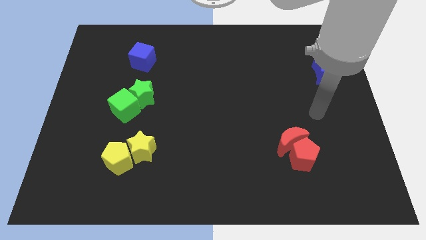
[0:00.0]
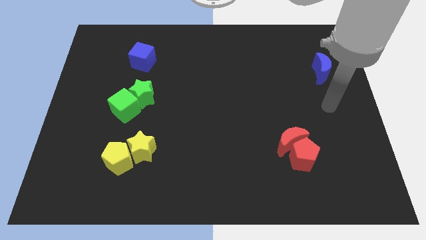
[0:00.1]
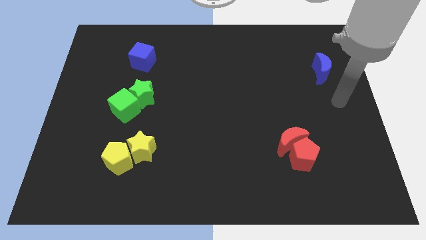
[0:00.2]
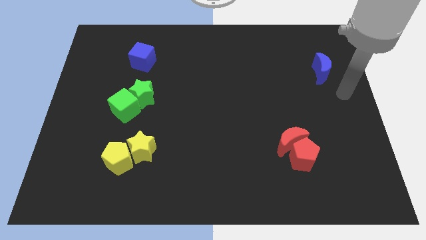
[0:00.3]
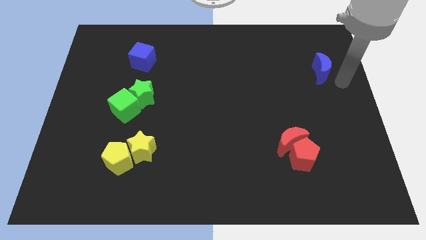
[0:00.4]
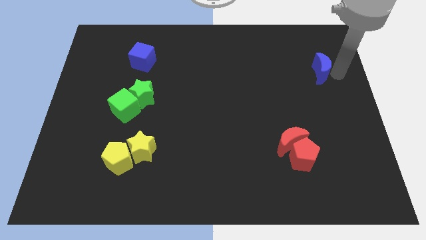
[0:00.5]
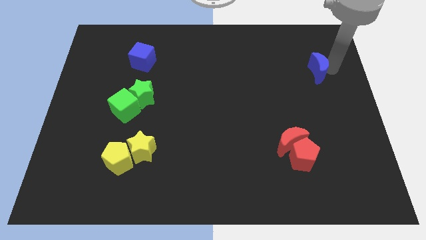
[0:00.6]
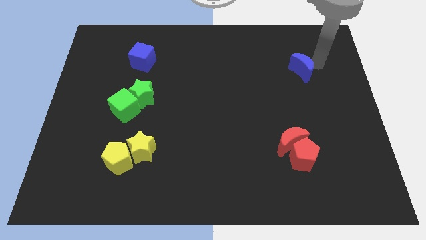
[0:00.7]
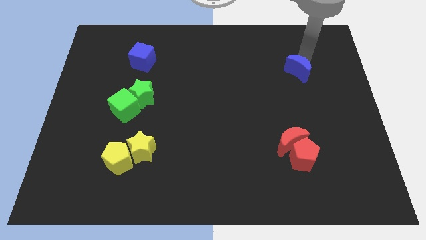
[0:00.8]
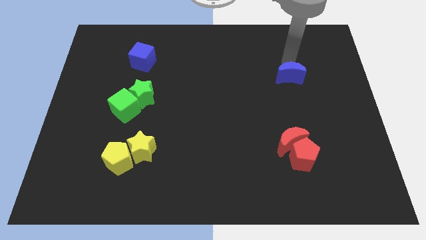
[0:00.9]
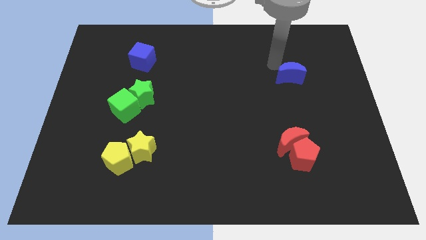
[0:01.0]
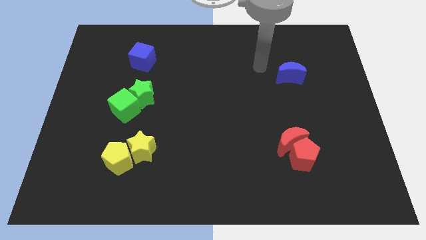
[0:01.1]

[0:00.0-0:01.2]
place the blue moon vertically above the red blocks

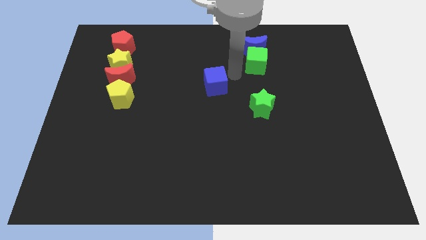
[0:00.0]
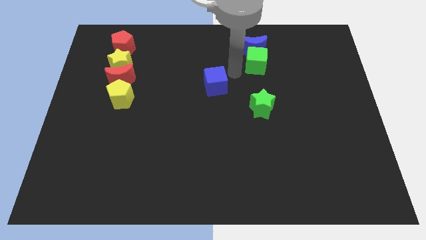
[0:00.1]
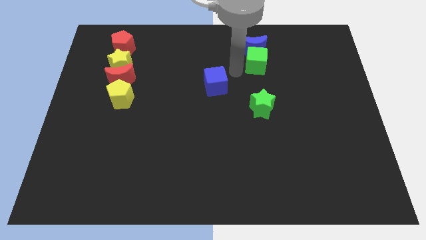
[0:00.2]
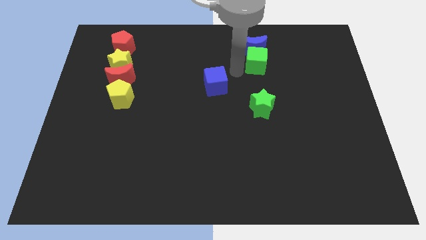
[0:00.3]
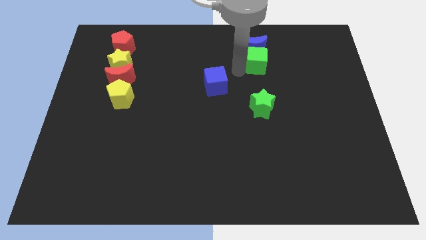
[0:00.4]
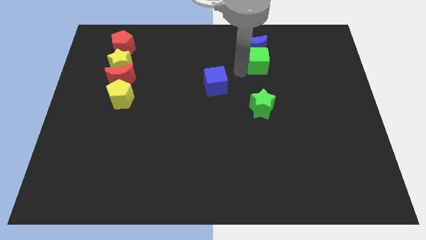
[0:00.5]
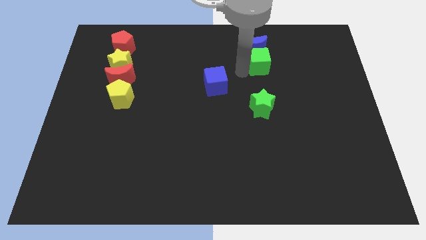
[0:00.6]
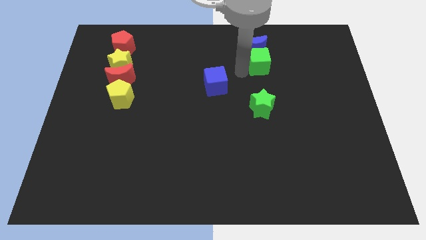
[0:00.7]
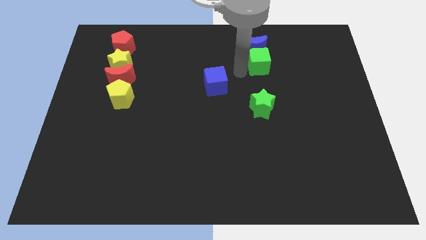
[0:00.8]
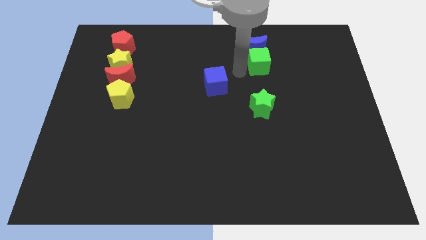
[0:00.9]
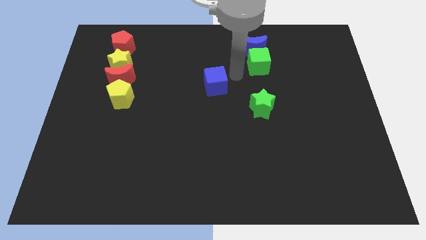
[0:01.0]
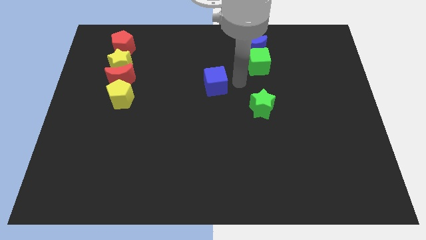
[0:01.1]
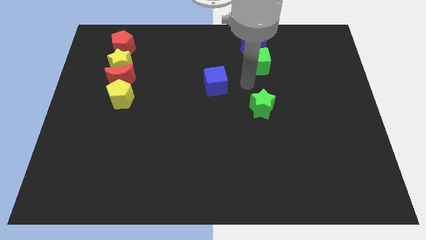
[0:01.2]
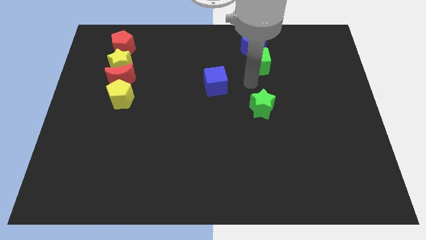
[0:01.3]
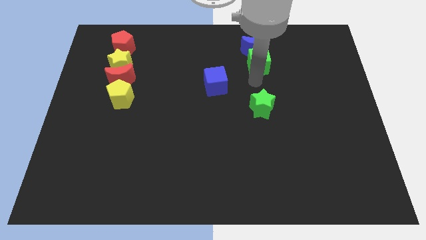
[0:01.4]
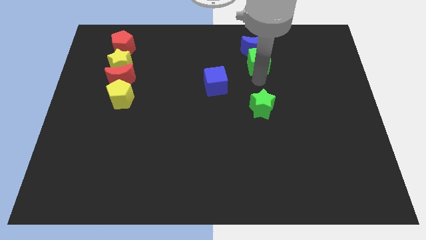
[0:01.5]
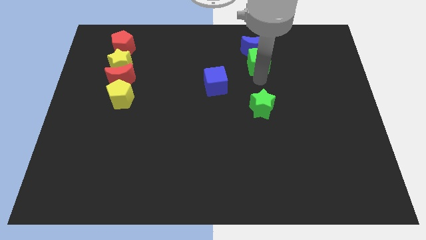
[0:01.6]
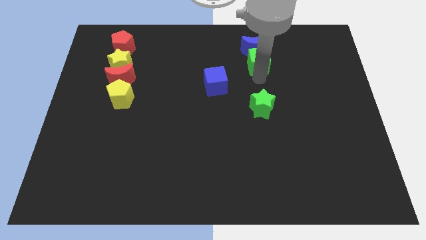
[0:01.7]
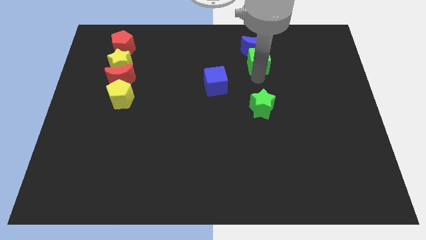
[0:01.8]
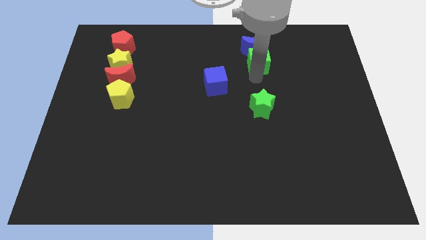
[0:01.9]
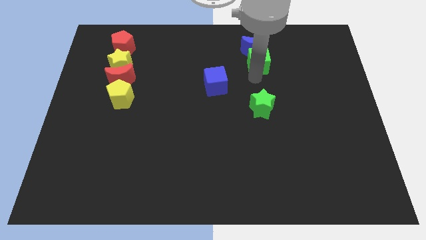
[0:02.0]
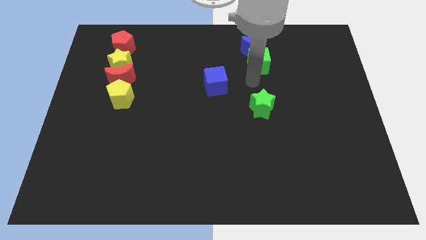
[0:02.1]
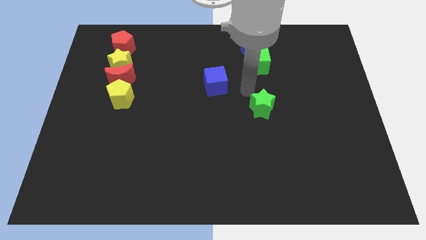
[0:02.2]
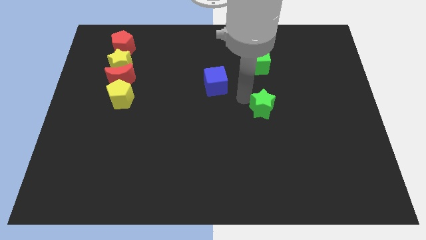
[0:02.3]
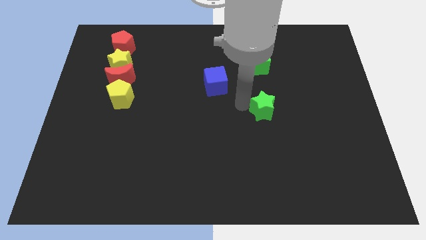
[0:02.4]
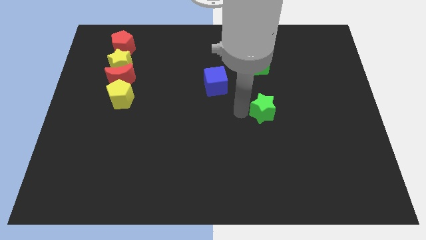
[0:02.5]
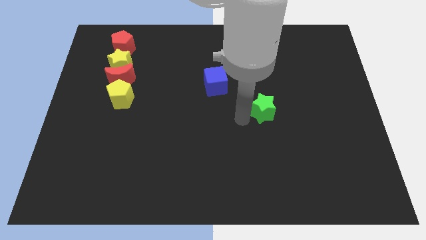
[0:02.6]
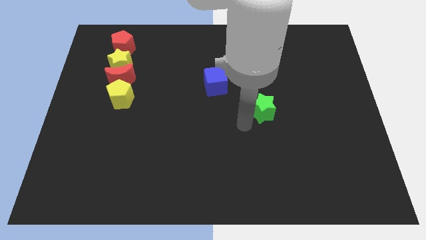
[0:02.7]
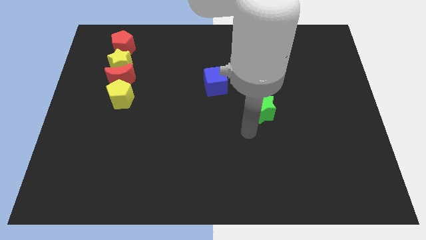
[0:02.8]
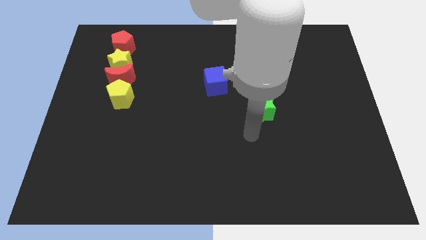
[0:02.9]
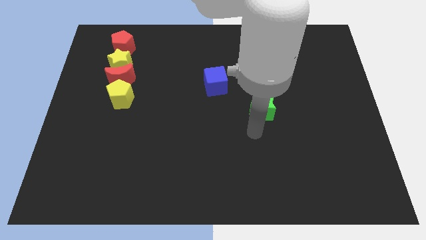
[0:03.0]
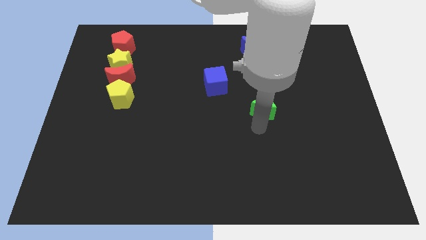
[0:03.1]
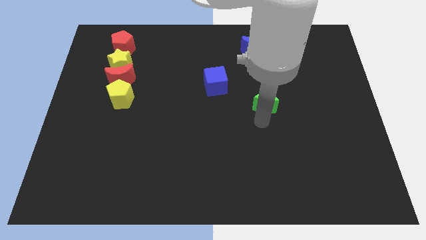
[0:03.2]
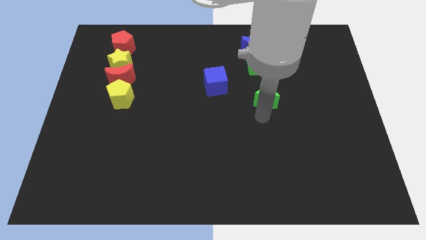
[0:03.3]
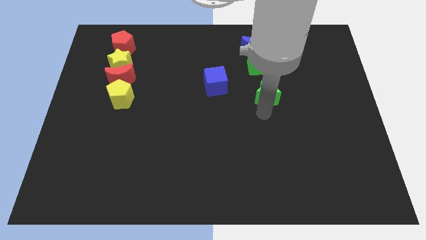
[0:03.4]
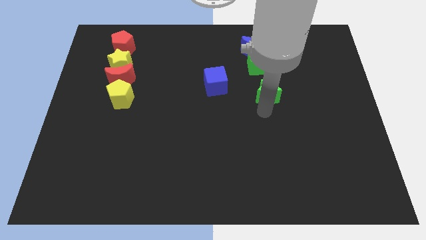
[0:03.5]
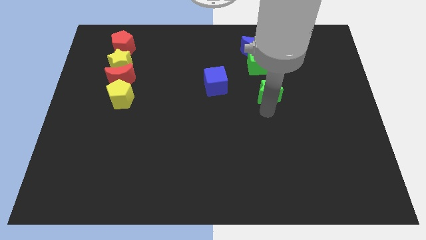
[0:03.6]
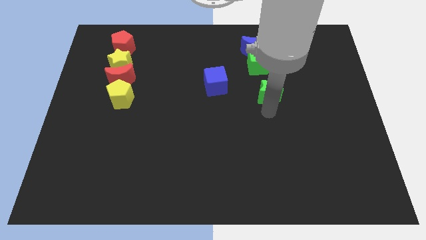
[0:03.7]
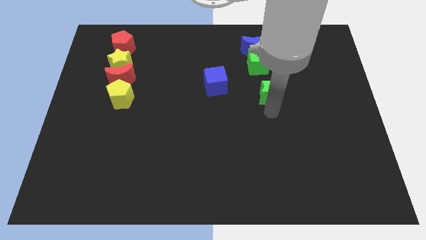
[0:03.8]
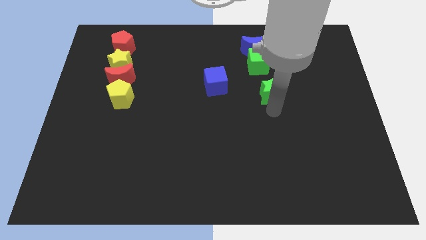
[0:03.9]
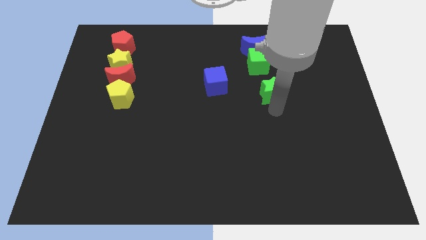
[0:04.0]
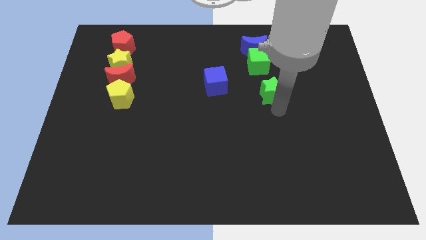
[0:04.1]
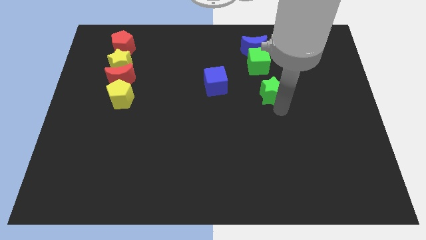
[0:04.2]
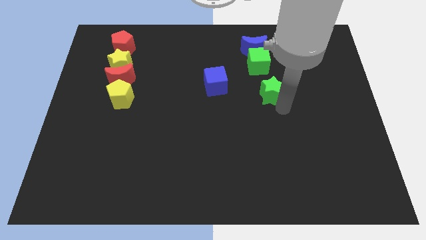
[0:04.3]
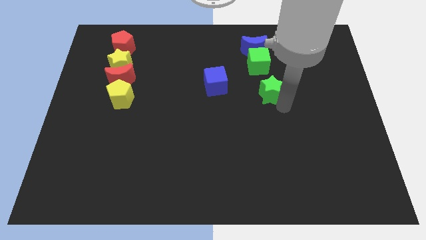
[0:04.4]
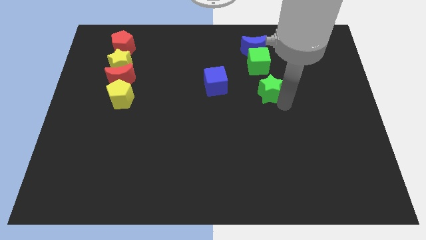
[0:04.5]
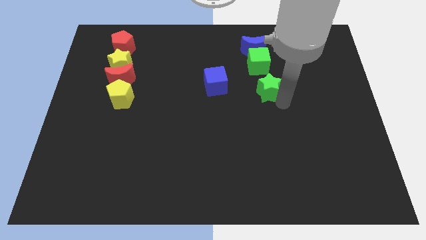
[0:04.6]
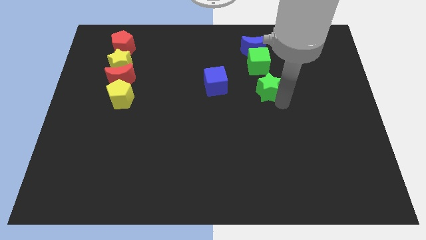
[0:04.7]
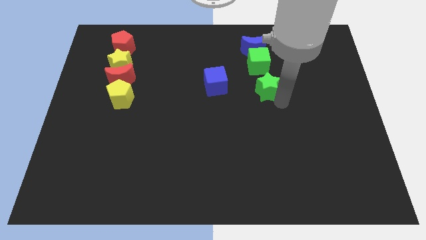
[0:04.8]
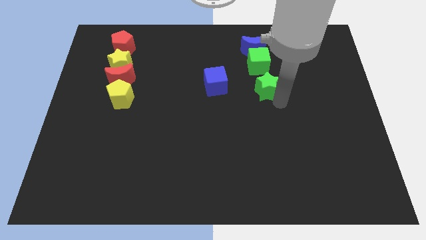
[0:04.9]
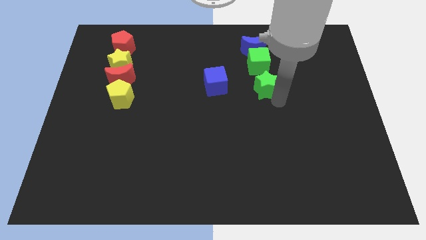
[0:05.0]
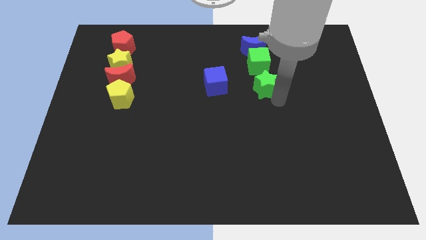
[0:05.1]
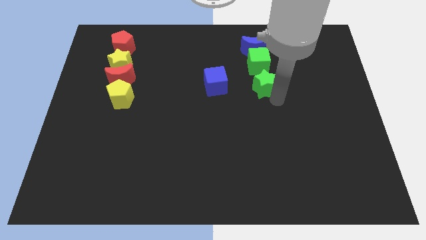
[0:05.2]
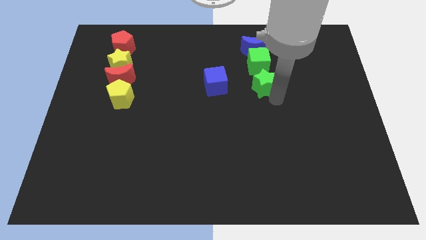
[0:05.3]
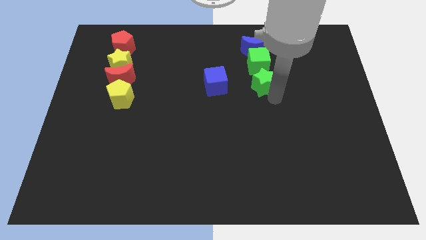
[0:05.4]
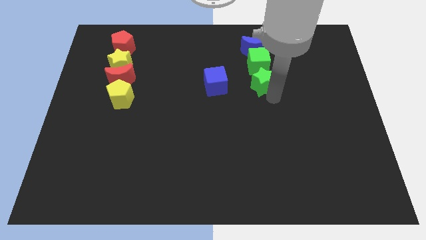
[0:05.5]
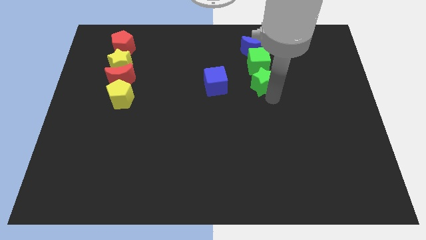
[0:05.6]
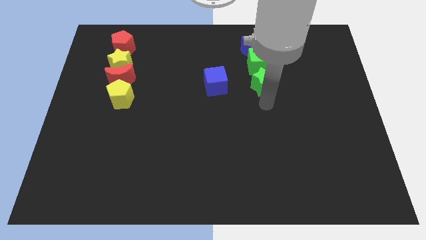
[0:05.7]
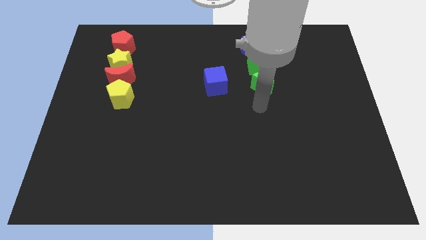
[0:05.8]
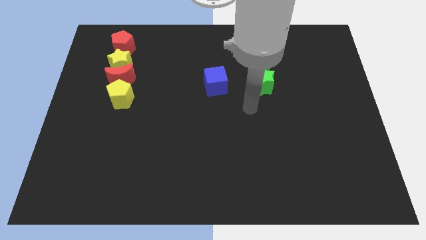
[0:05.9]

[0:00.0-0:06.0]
move the green star below the green cube

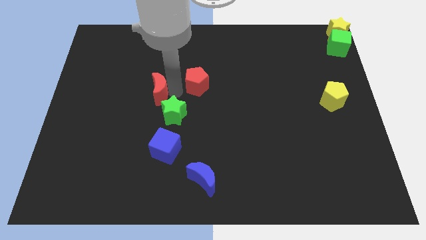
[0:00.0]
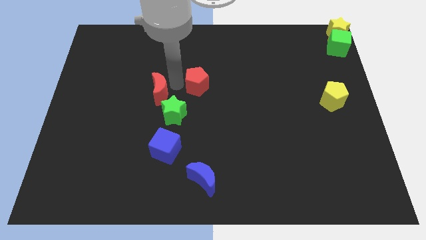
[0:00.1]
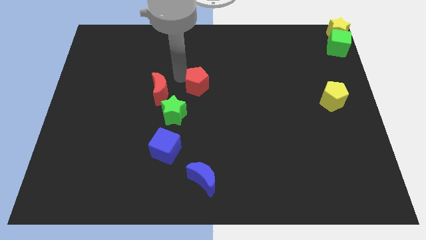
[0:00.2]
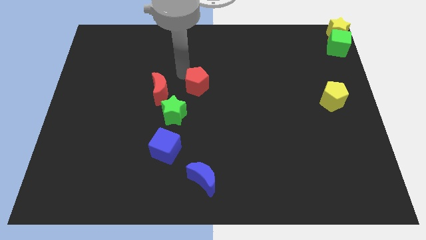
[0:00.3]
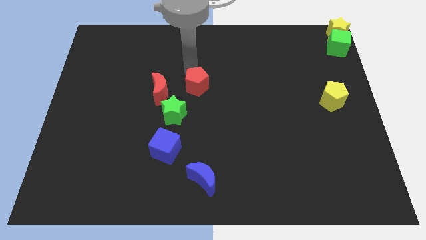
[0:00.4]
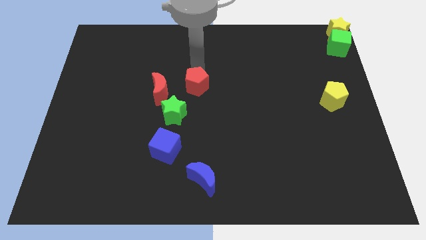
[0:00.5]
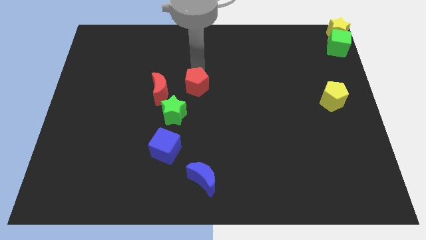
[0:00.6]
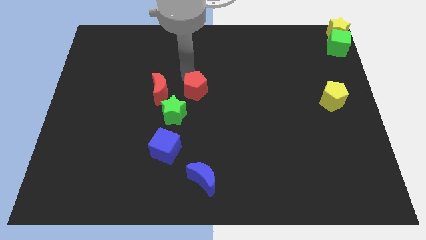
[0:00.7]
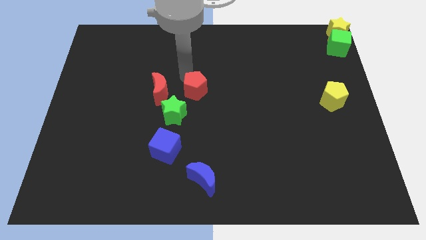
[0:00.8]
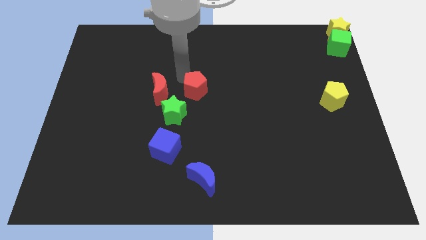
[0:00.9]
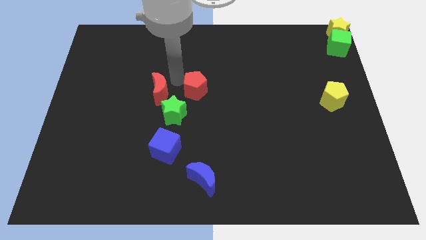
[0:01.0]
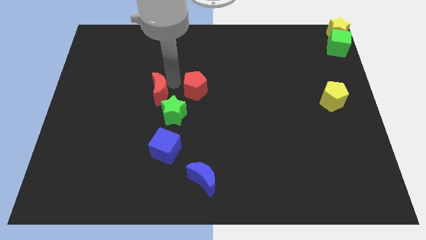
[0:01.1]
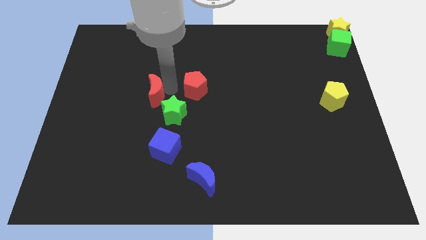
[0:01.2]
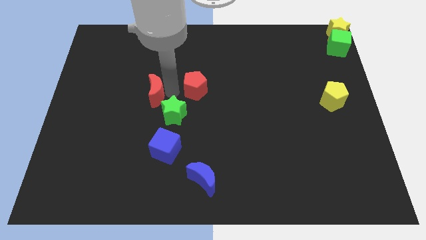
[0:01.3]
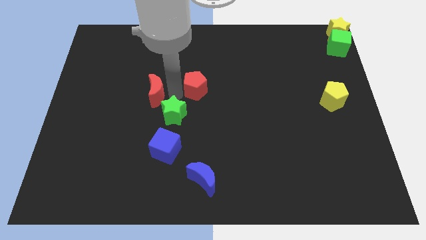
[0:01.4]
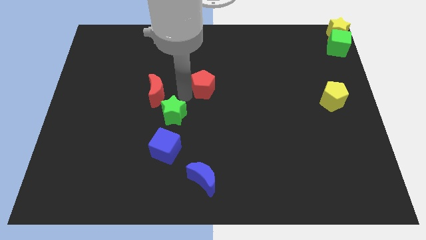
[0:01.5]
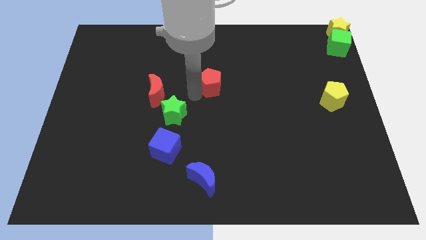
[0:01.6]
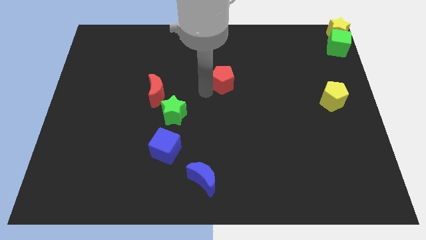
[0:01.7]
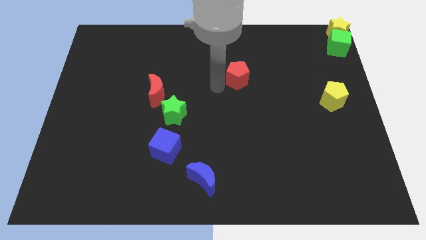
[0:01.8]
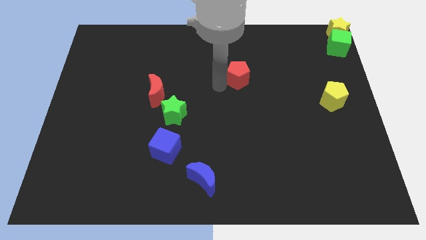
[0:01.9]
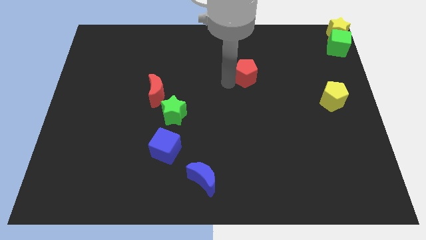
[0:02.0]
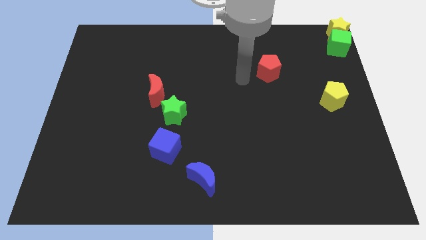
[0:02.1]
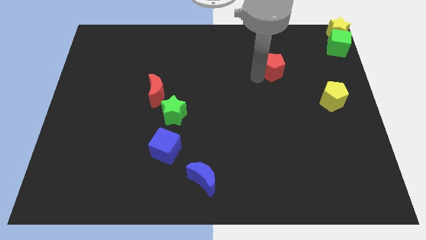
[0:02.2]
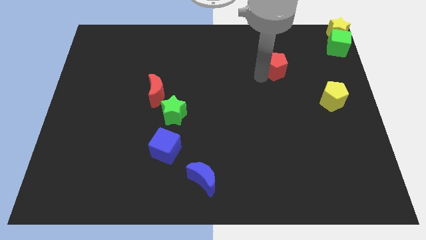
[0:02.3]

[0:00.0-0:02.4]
separate the red pentagon from the red moon
